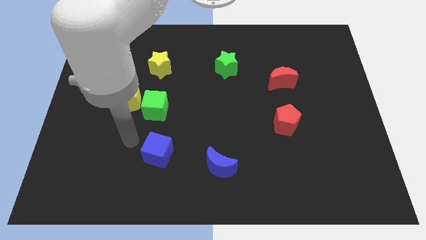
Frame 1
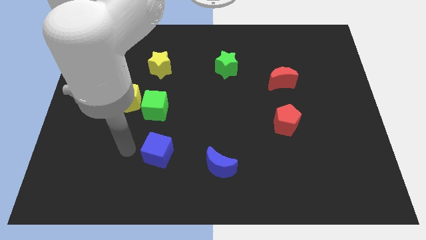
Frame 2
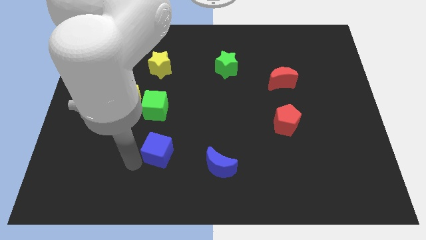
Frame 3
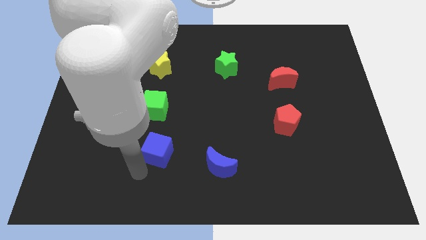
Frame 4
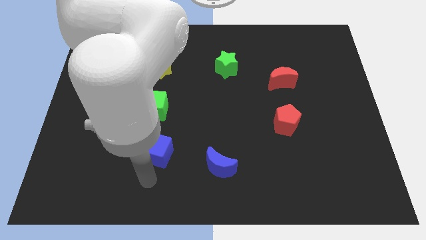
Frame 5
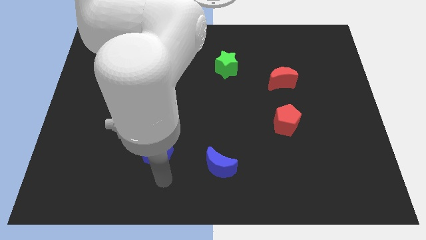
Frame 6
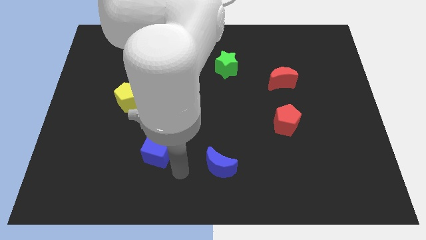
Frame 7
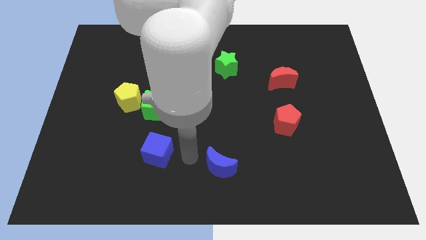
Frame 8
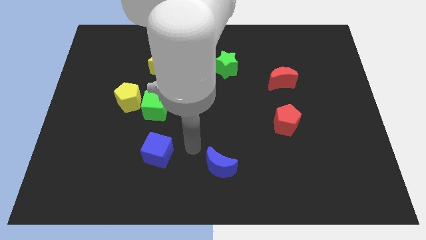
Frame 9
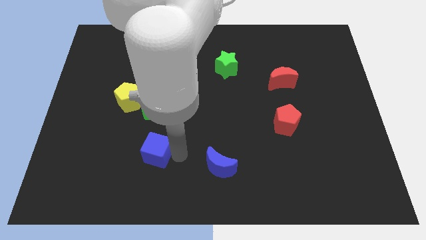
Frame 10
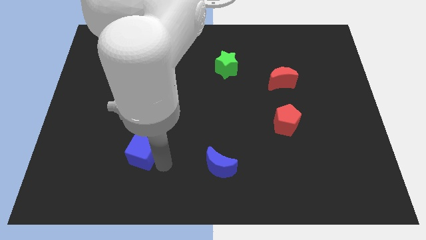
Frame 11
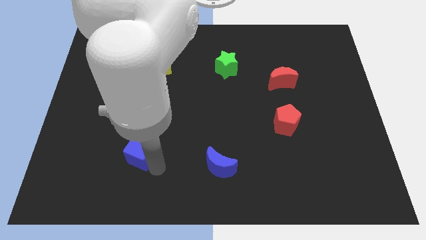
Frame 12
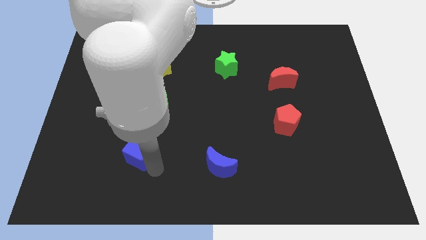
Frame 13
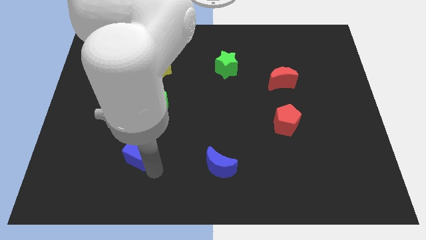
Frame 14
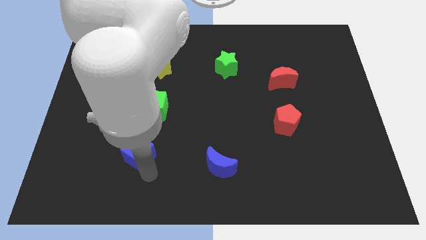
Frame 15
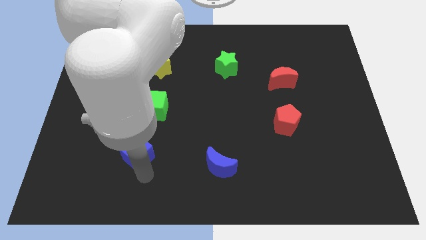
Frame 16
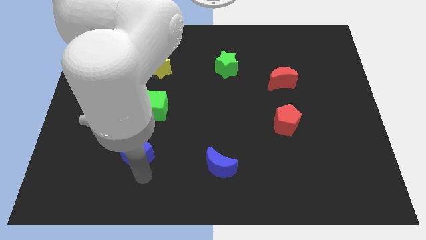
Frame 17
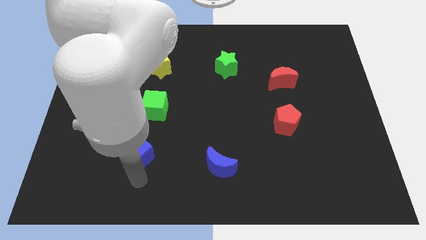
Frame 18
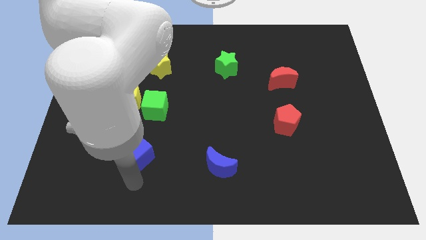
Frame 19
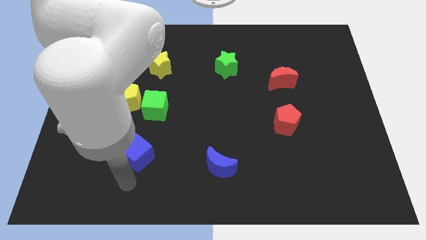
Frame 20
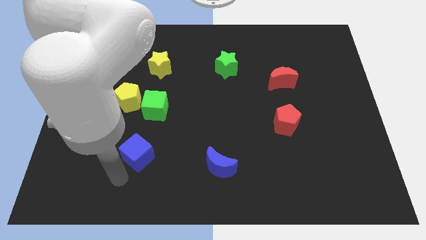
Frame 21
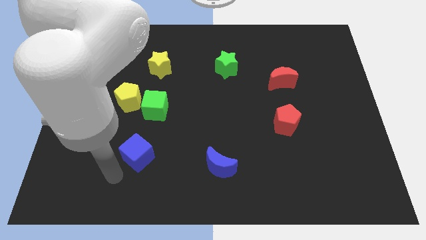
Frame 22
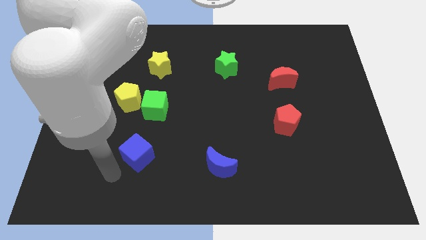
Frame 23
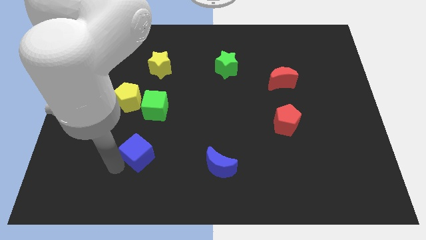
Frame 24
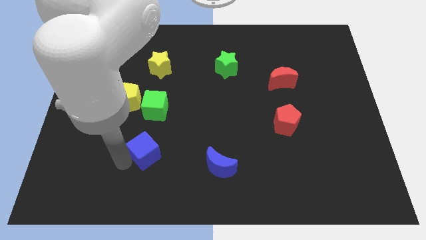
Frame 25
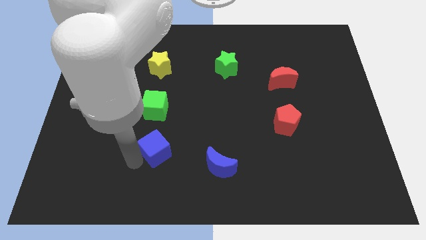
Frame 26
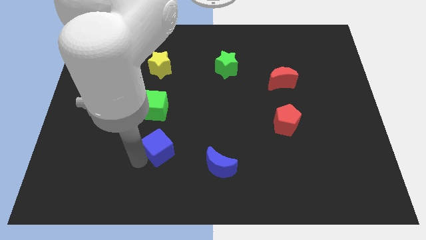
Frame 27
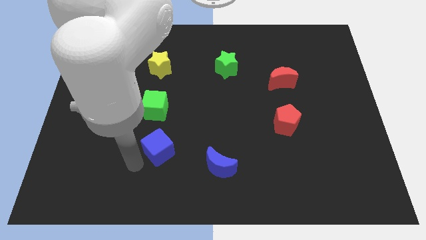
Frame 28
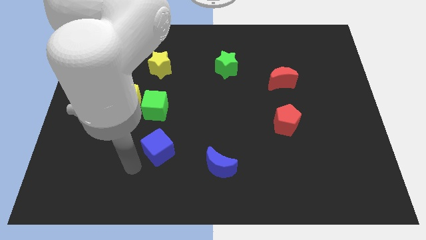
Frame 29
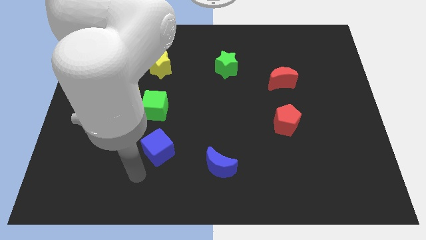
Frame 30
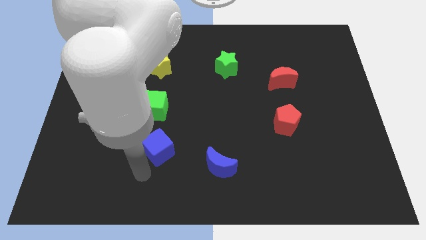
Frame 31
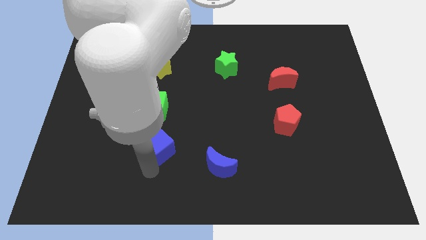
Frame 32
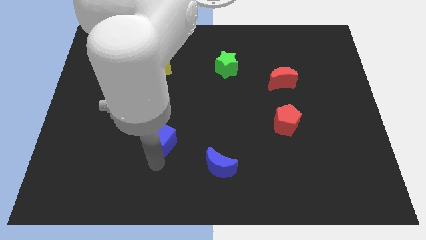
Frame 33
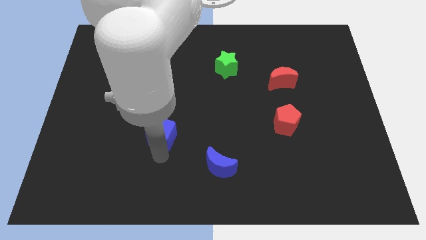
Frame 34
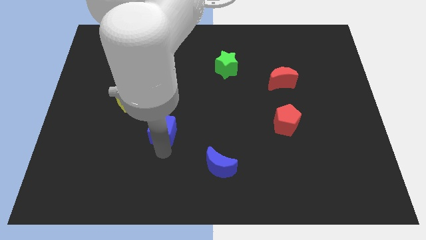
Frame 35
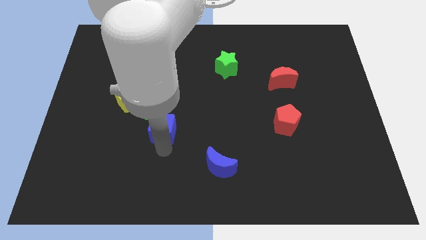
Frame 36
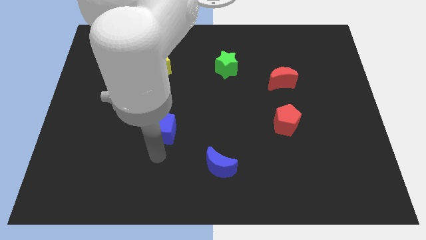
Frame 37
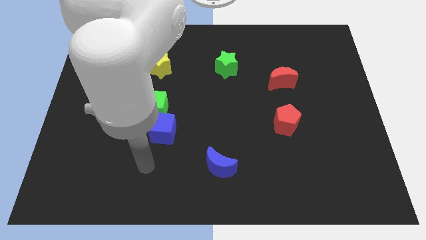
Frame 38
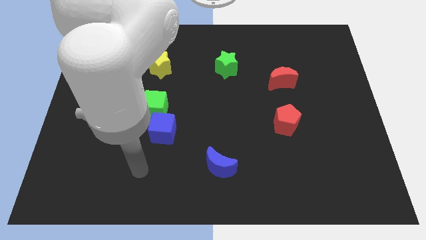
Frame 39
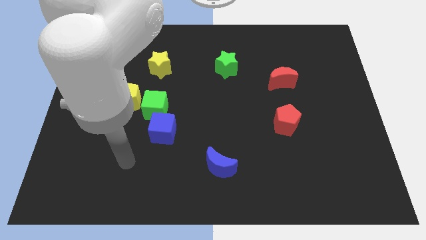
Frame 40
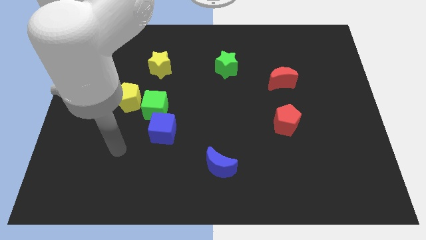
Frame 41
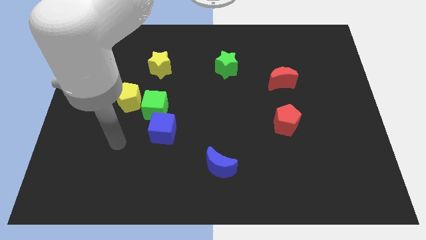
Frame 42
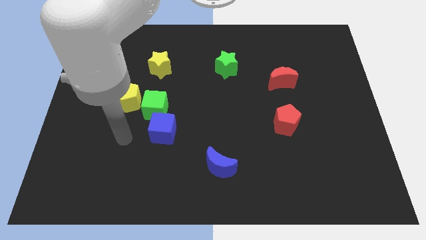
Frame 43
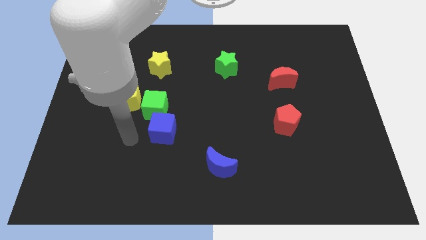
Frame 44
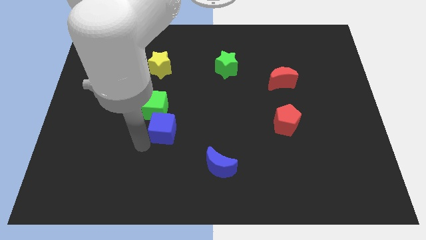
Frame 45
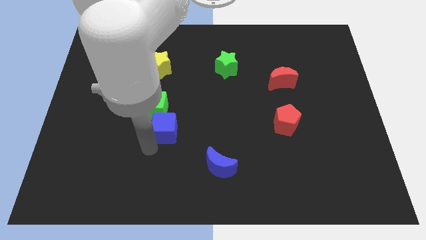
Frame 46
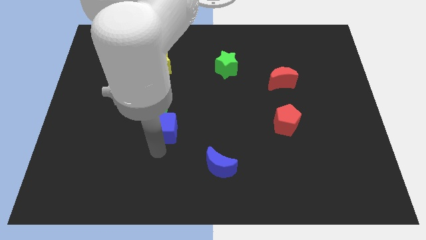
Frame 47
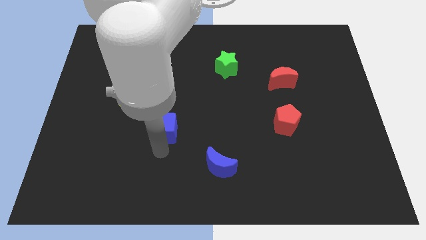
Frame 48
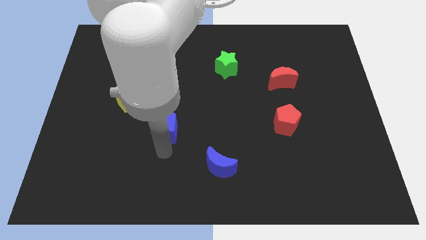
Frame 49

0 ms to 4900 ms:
place the blue cube to the bottom of the green cube

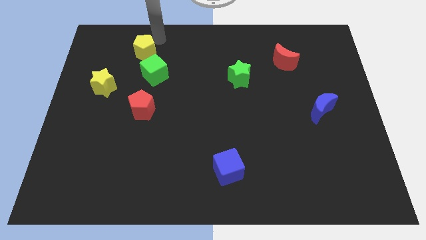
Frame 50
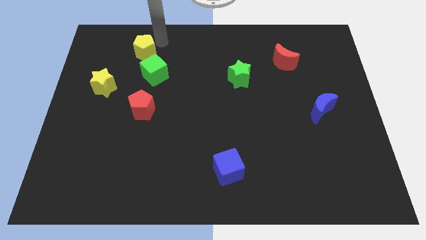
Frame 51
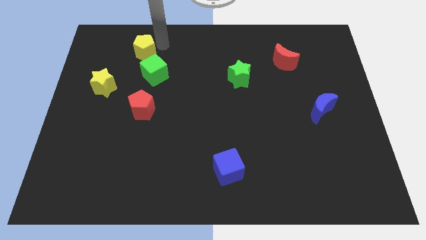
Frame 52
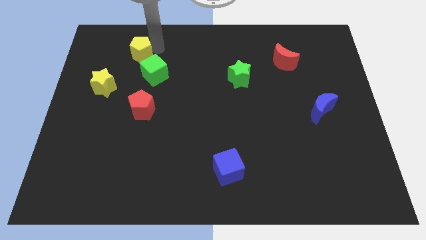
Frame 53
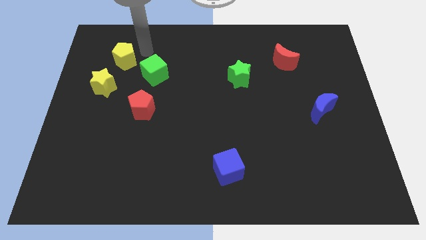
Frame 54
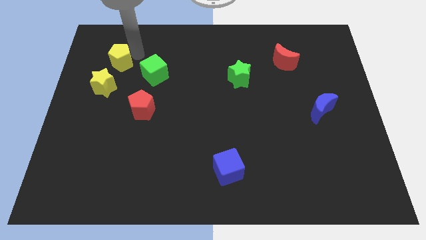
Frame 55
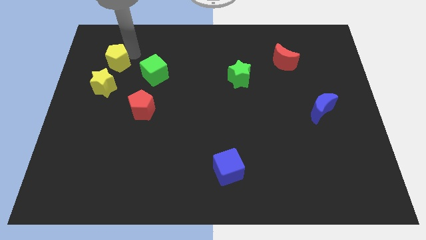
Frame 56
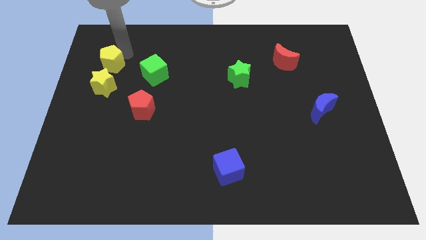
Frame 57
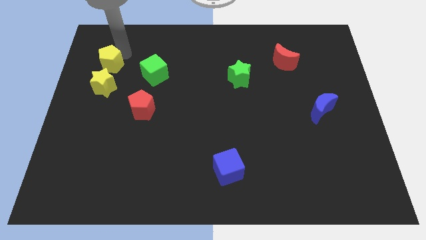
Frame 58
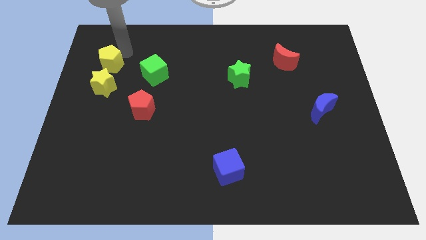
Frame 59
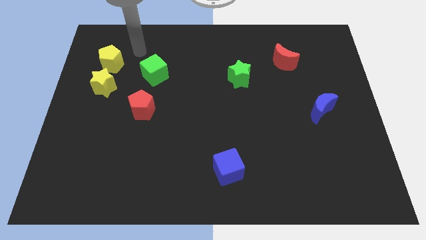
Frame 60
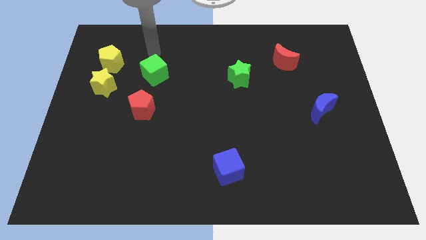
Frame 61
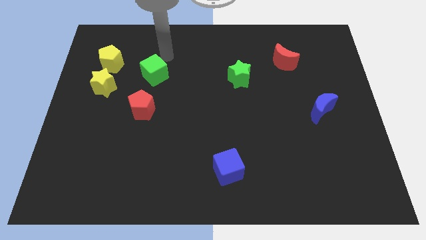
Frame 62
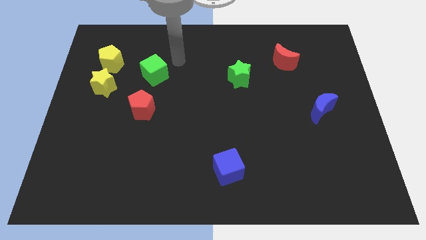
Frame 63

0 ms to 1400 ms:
place yellow polygon close to yellow star

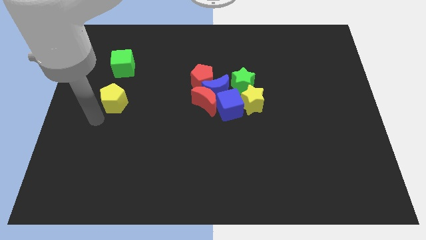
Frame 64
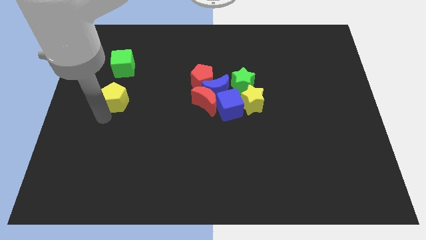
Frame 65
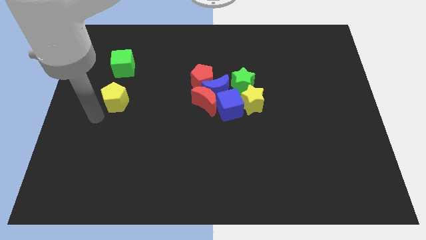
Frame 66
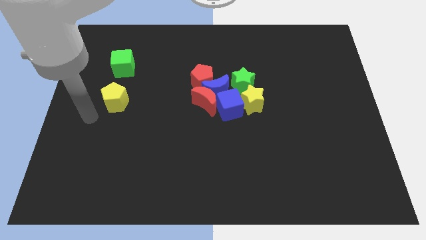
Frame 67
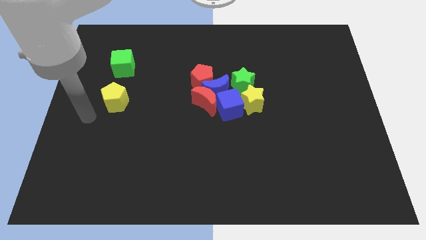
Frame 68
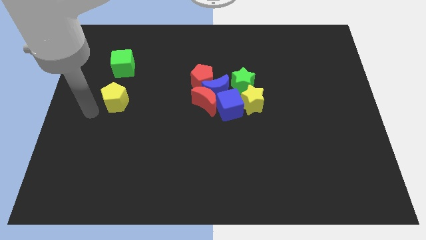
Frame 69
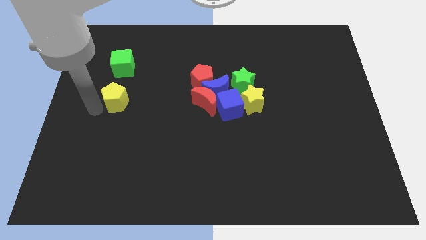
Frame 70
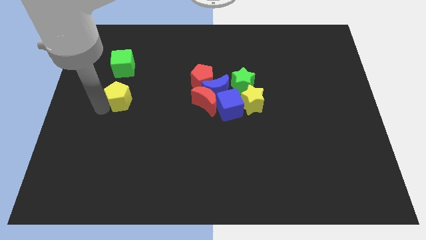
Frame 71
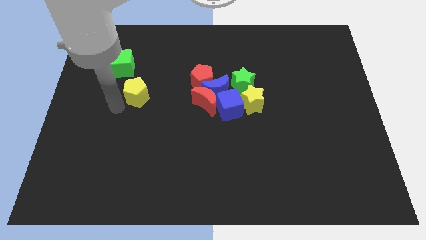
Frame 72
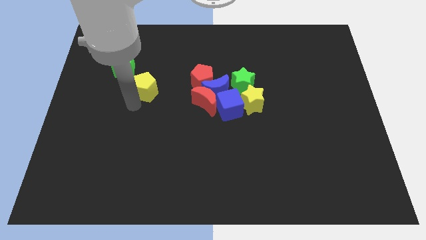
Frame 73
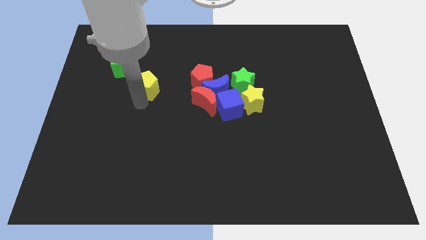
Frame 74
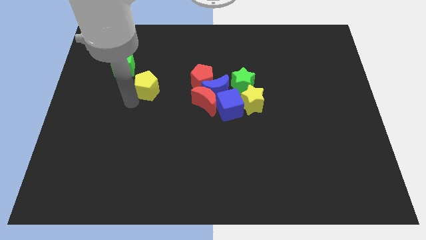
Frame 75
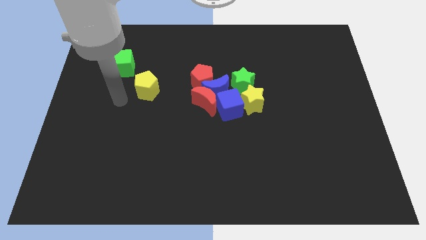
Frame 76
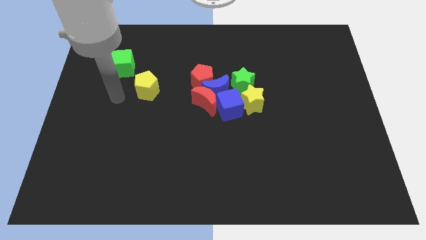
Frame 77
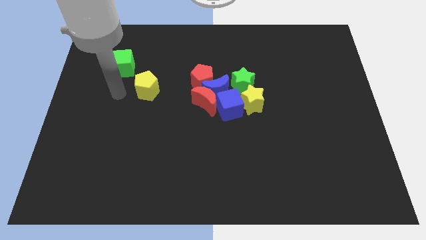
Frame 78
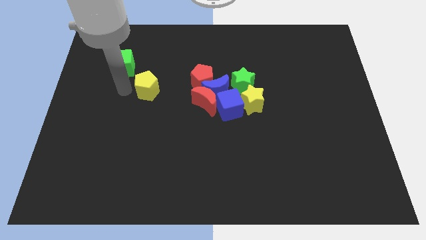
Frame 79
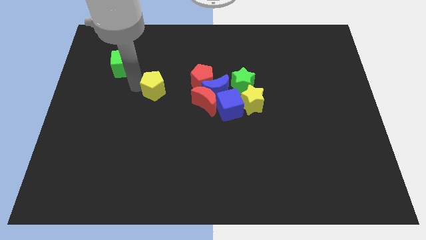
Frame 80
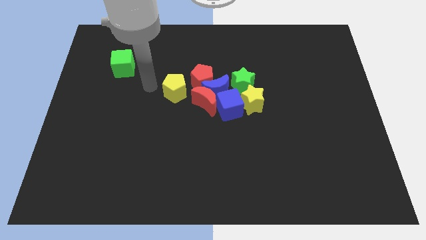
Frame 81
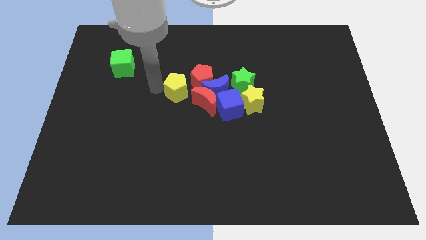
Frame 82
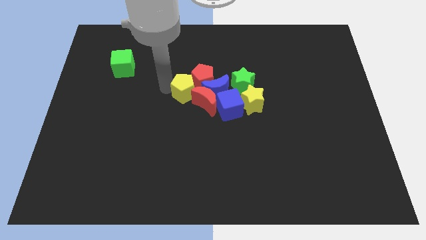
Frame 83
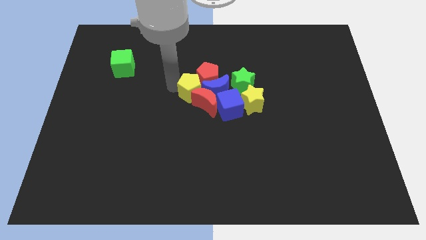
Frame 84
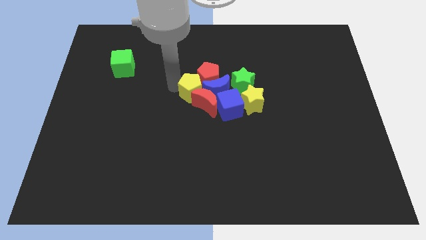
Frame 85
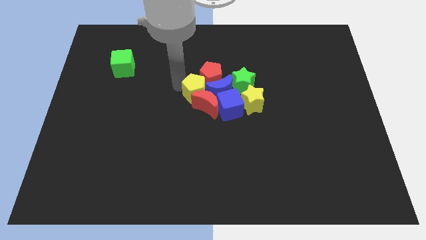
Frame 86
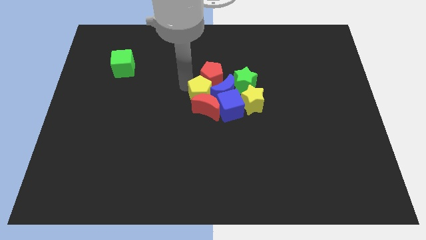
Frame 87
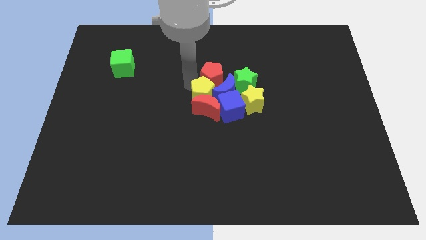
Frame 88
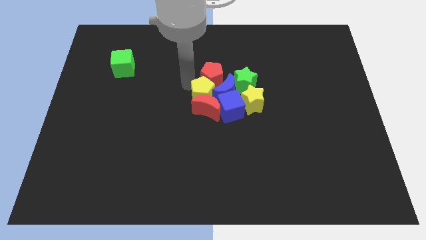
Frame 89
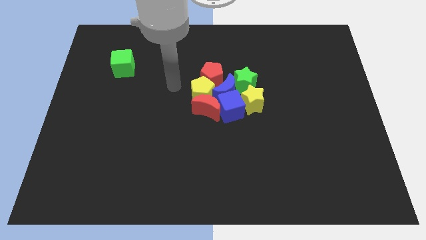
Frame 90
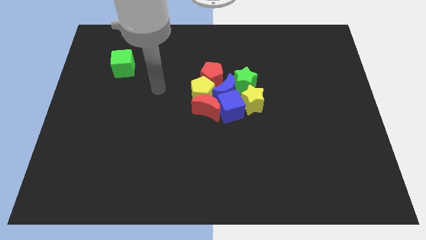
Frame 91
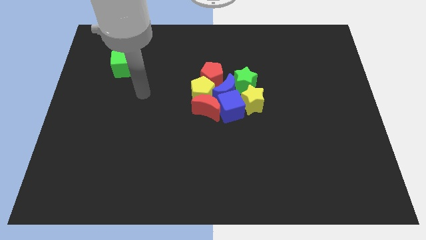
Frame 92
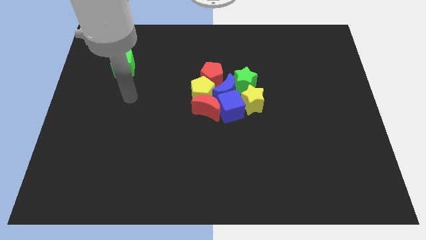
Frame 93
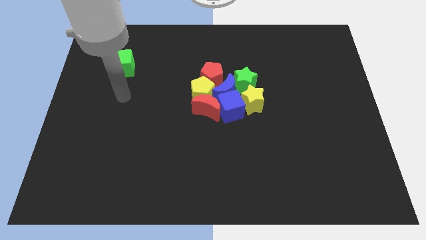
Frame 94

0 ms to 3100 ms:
push the yellow pentagon into the blue moon
